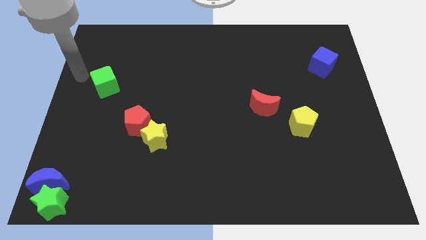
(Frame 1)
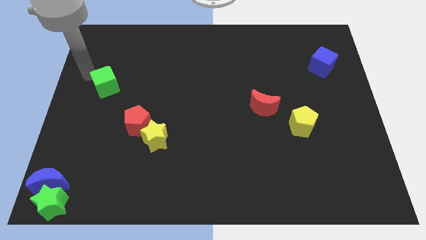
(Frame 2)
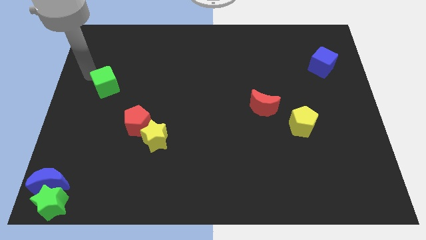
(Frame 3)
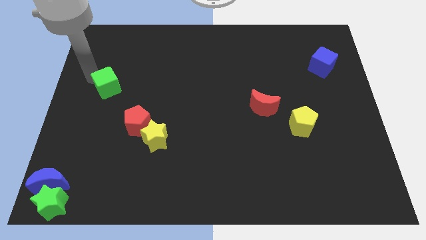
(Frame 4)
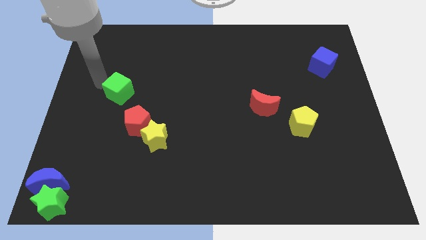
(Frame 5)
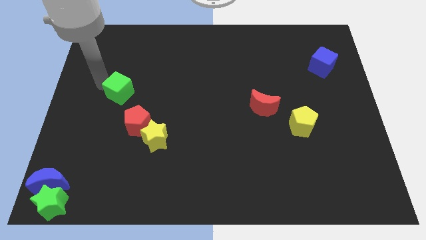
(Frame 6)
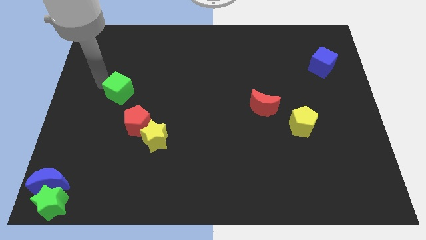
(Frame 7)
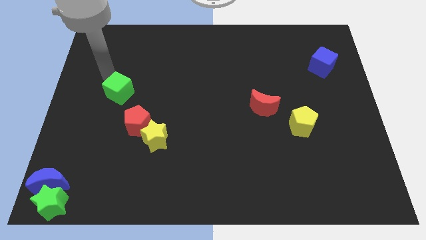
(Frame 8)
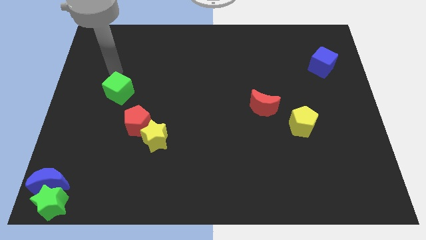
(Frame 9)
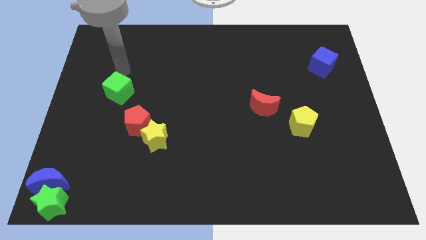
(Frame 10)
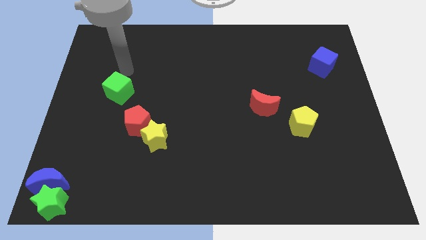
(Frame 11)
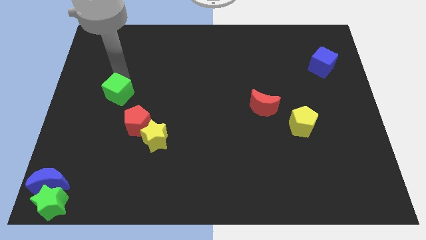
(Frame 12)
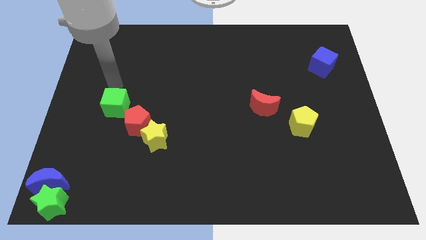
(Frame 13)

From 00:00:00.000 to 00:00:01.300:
push the green cube towards the red pentagon

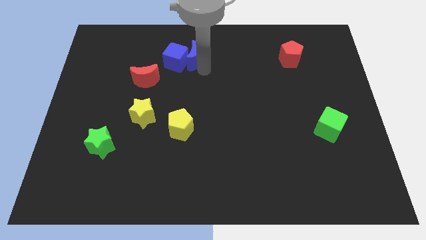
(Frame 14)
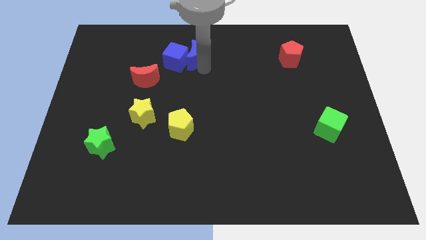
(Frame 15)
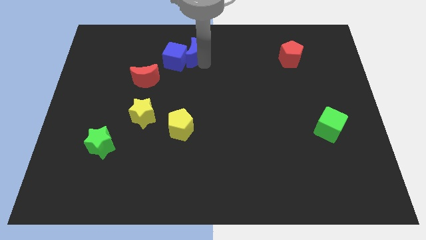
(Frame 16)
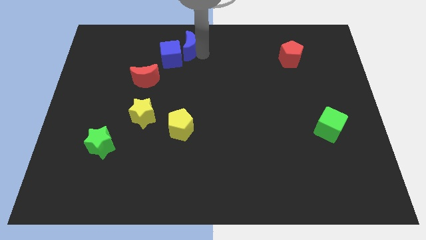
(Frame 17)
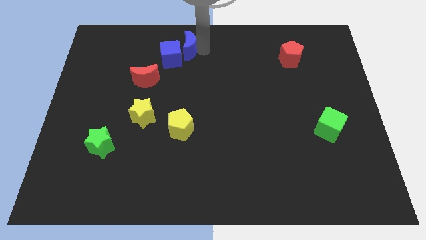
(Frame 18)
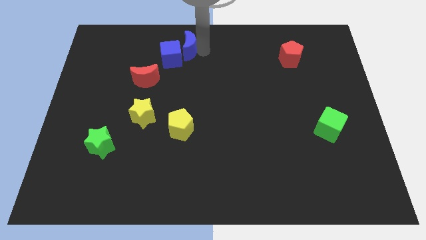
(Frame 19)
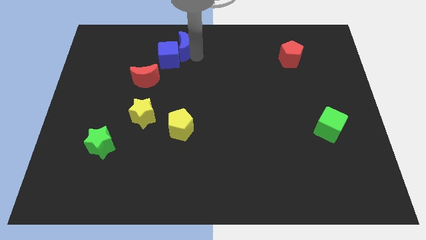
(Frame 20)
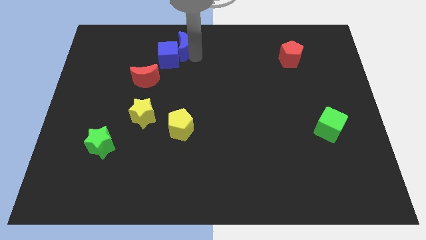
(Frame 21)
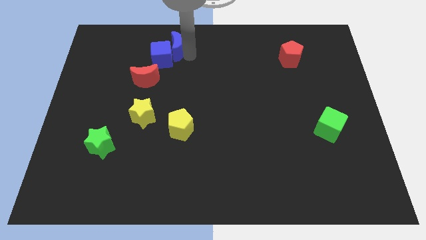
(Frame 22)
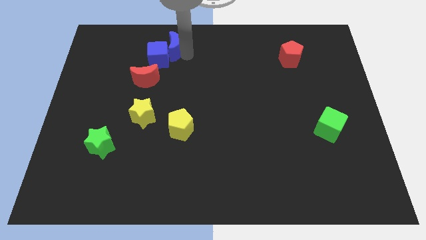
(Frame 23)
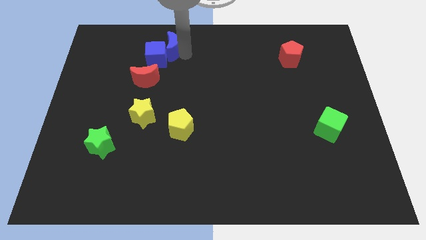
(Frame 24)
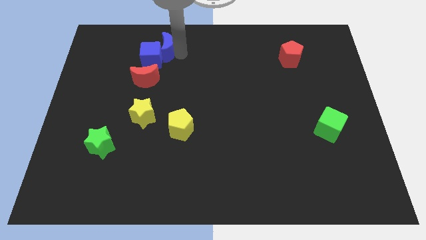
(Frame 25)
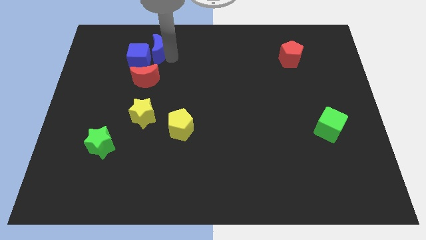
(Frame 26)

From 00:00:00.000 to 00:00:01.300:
place blue cube to the top of red moon

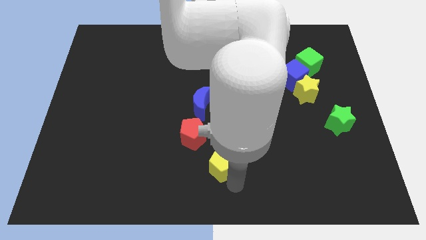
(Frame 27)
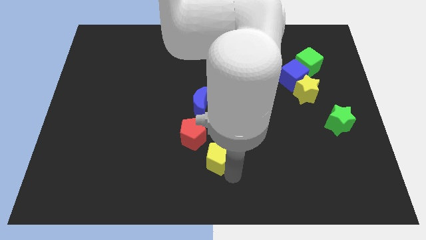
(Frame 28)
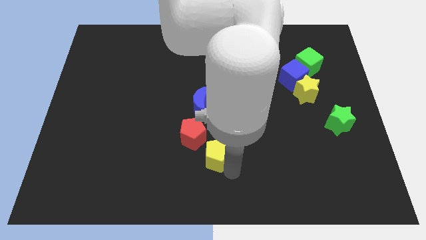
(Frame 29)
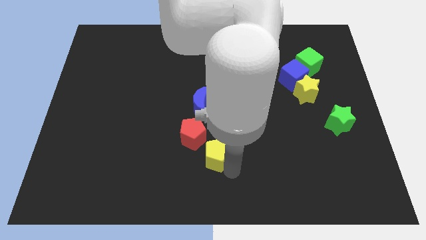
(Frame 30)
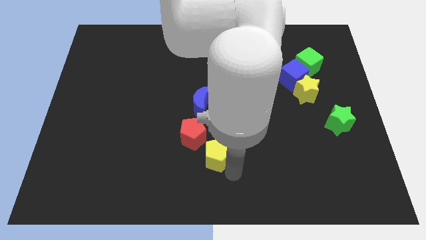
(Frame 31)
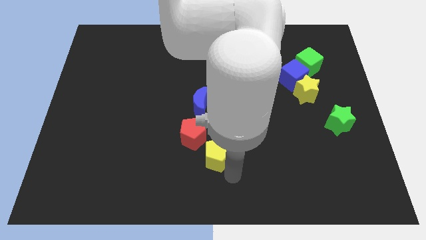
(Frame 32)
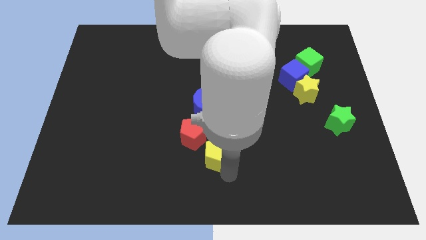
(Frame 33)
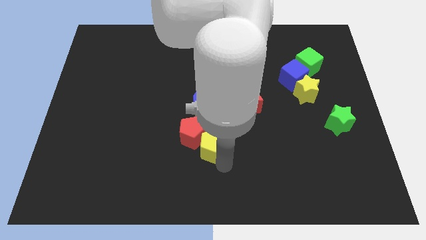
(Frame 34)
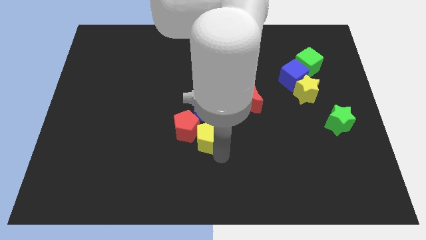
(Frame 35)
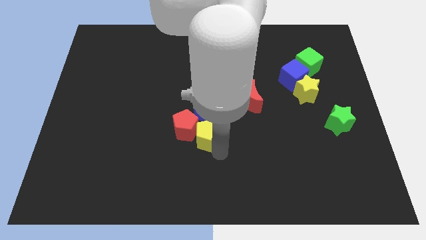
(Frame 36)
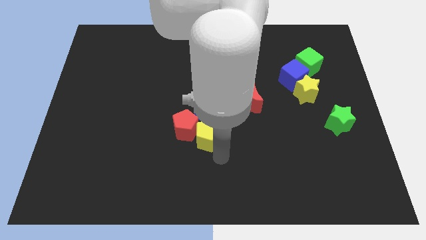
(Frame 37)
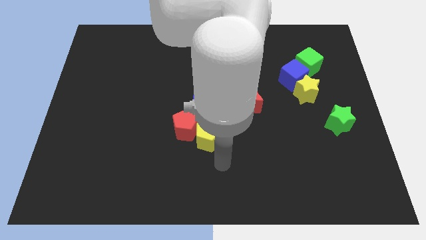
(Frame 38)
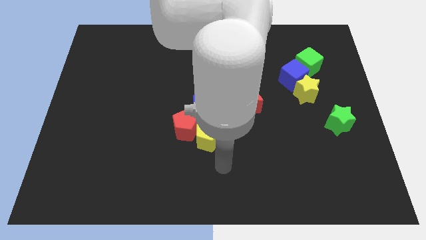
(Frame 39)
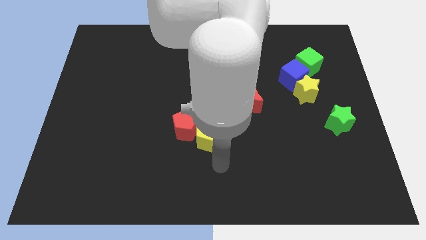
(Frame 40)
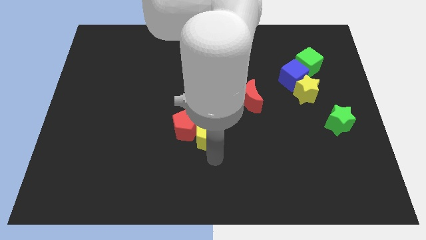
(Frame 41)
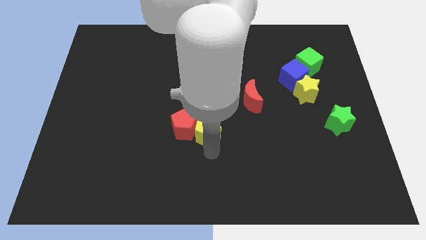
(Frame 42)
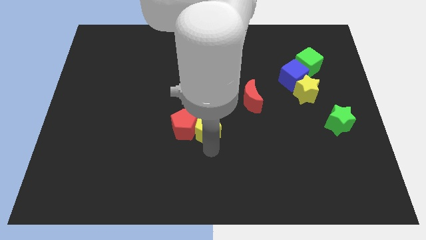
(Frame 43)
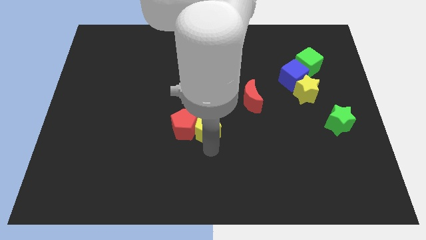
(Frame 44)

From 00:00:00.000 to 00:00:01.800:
push the yellow pentagon towards the blue crescent

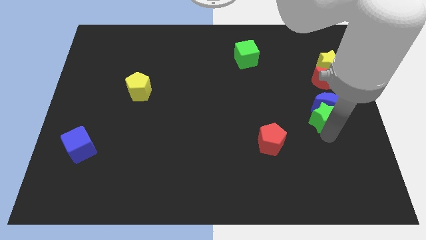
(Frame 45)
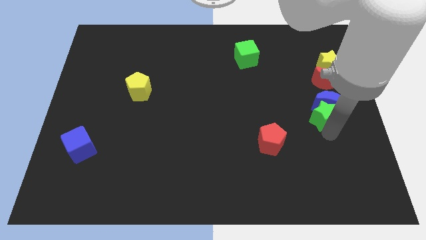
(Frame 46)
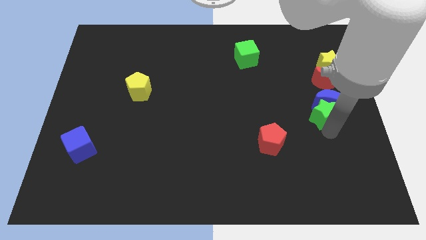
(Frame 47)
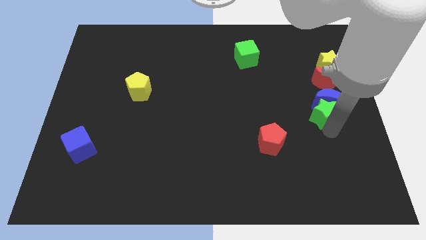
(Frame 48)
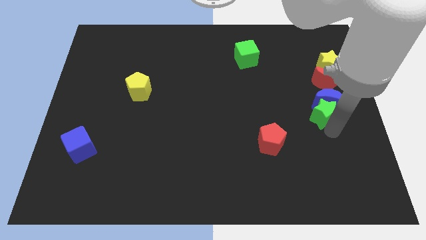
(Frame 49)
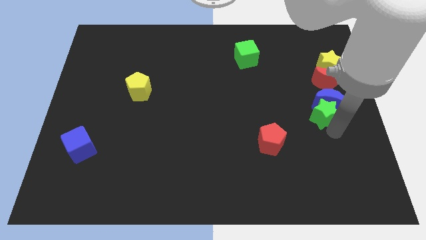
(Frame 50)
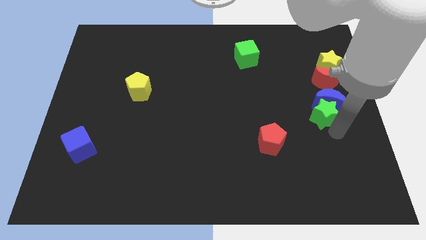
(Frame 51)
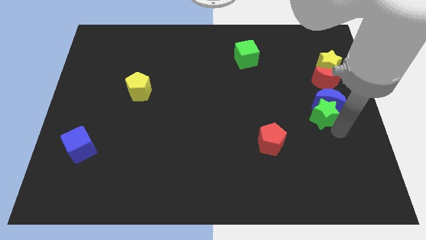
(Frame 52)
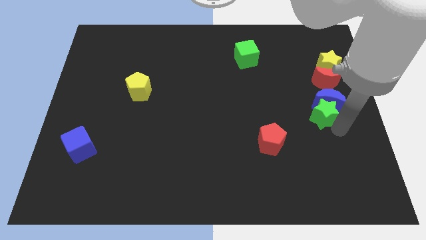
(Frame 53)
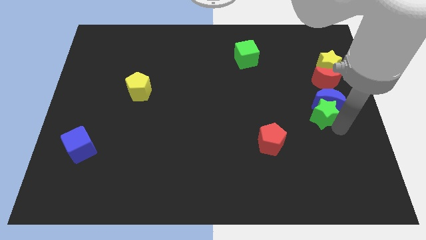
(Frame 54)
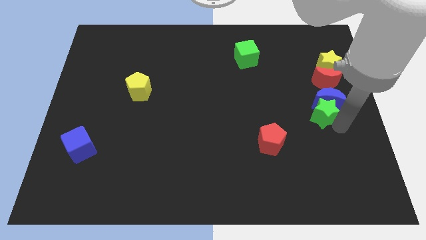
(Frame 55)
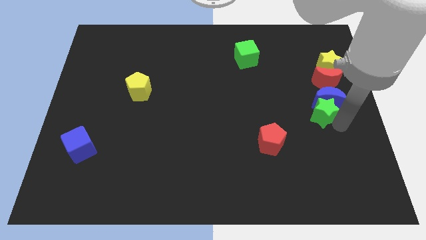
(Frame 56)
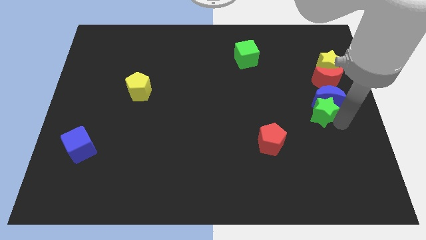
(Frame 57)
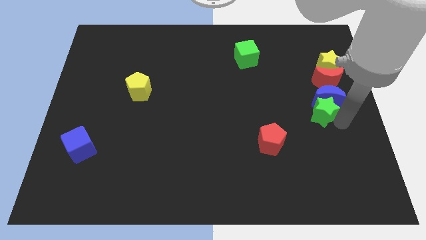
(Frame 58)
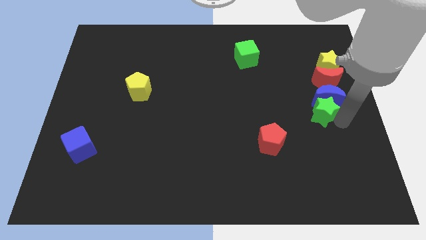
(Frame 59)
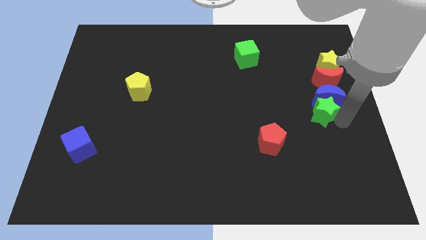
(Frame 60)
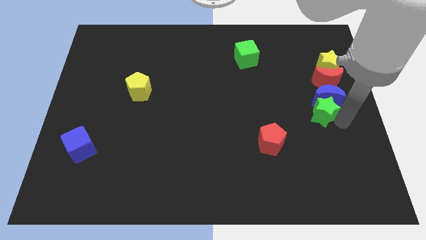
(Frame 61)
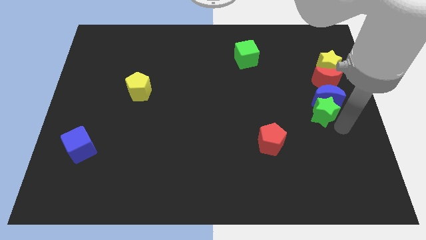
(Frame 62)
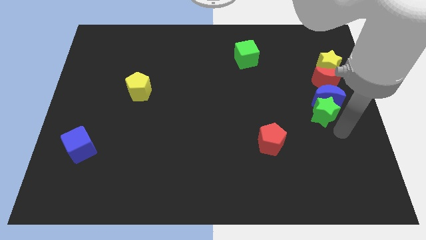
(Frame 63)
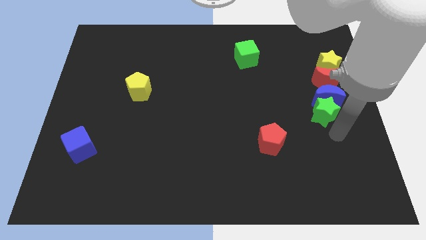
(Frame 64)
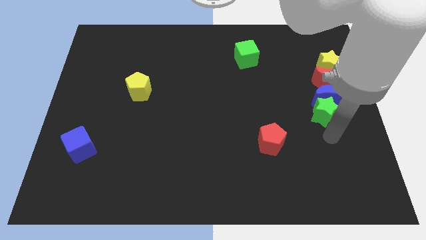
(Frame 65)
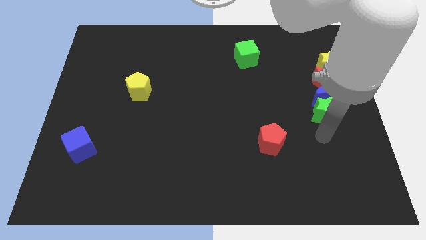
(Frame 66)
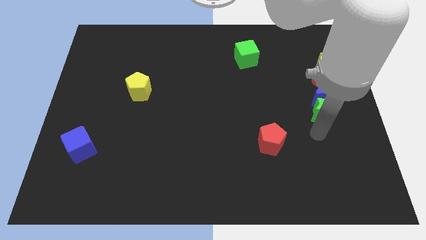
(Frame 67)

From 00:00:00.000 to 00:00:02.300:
move the green star and blue moon below the red moon

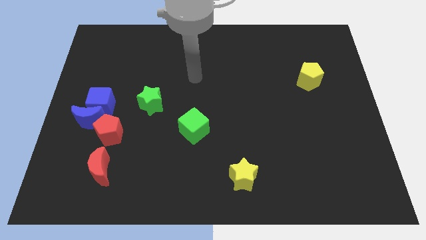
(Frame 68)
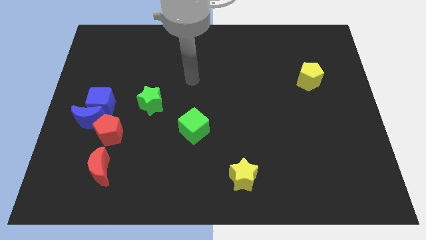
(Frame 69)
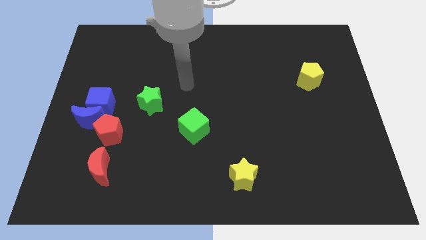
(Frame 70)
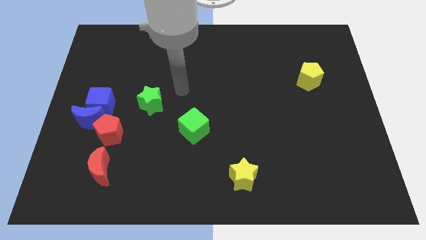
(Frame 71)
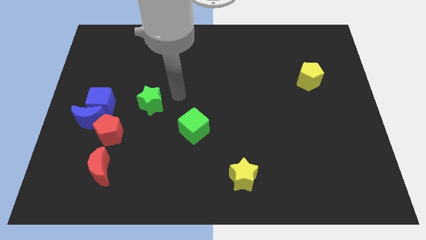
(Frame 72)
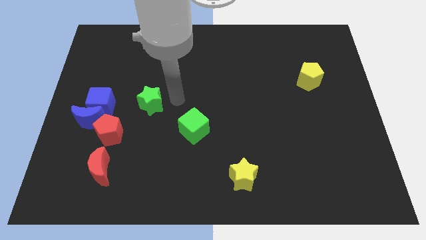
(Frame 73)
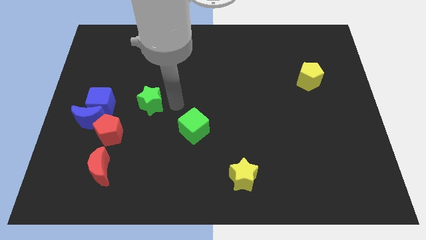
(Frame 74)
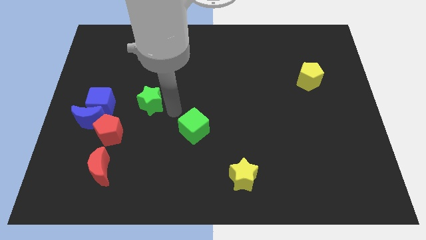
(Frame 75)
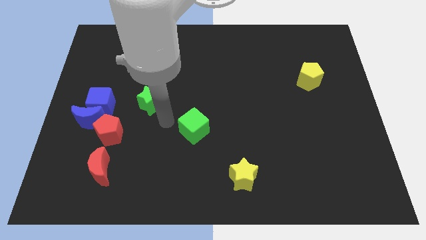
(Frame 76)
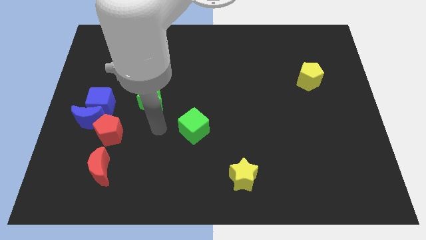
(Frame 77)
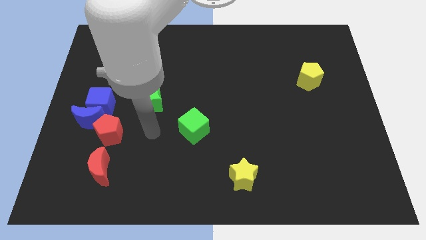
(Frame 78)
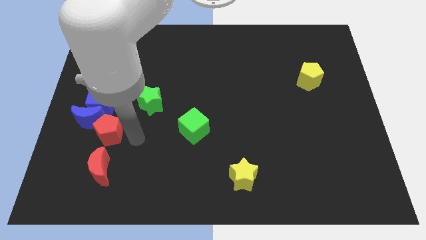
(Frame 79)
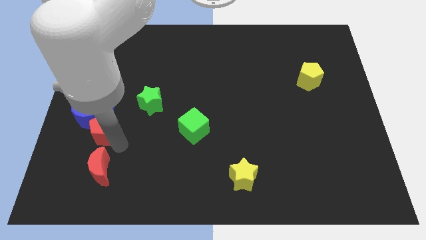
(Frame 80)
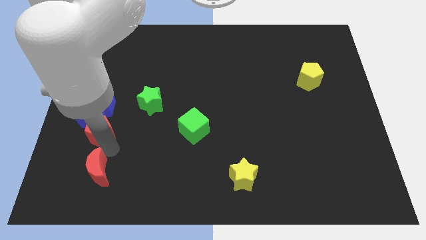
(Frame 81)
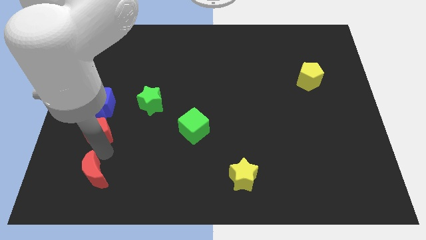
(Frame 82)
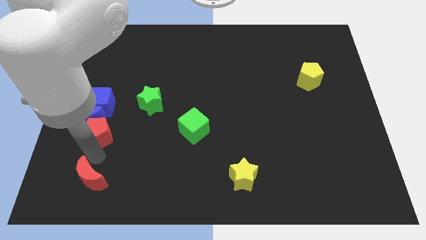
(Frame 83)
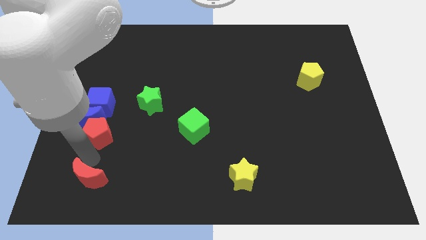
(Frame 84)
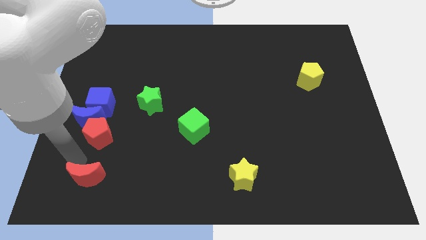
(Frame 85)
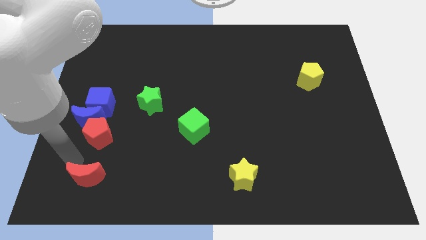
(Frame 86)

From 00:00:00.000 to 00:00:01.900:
separate the red moon and red pentagon

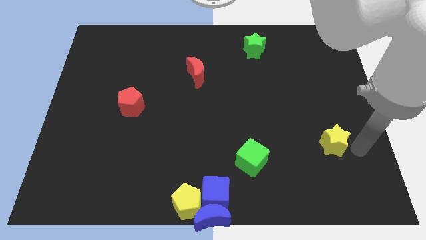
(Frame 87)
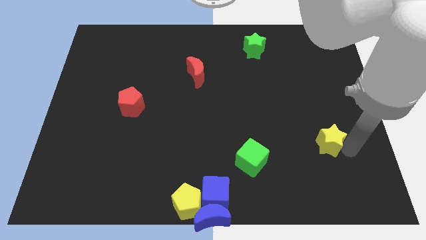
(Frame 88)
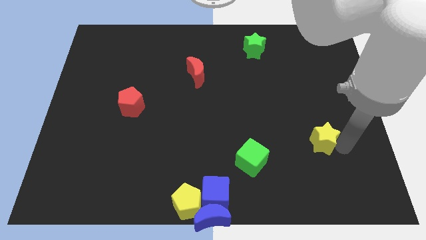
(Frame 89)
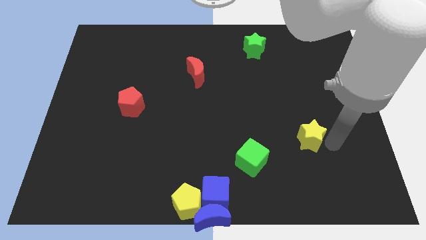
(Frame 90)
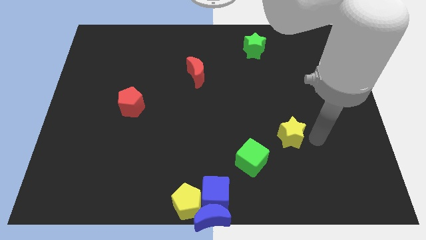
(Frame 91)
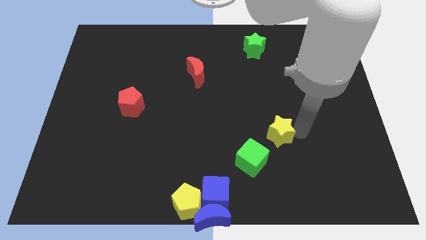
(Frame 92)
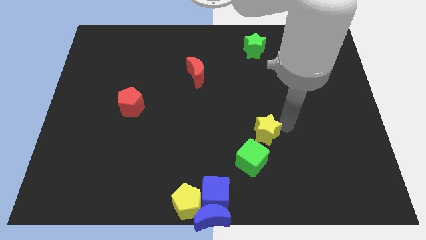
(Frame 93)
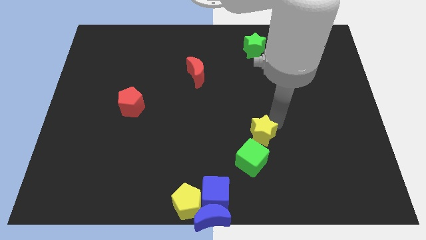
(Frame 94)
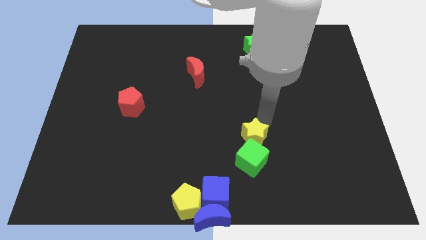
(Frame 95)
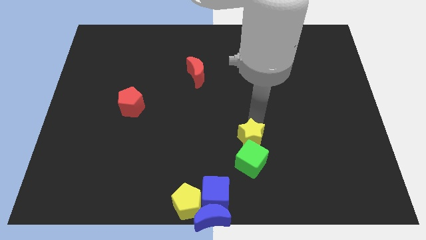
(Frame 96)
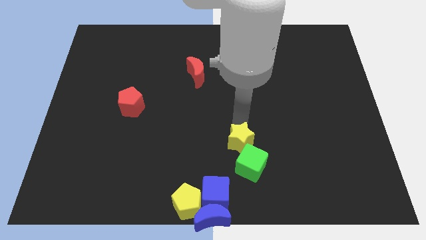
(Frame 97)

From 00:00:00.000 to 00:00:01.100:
put the yellow star to the top of the green cube
